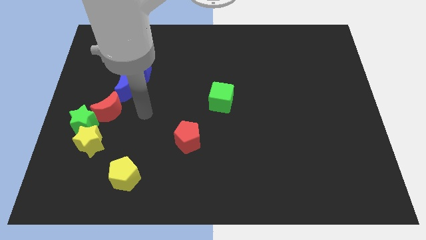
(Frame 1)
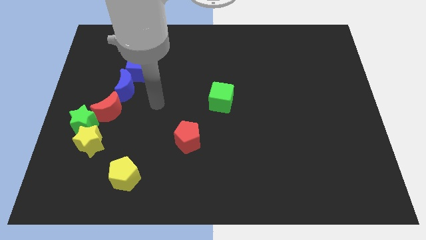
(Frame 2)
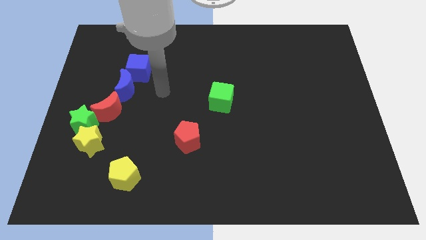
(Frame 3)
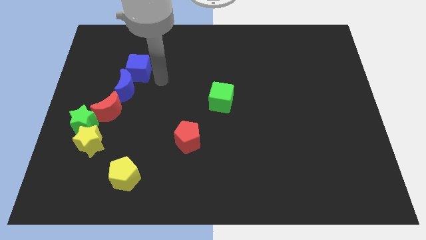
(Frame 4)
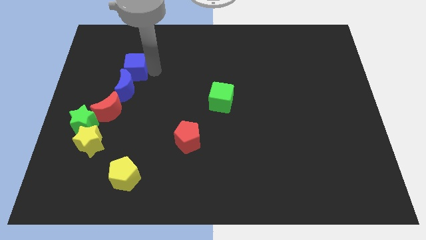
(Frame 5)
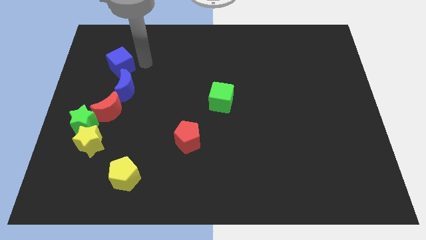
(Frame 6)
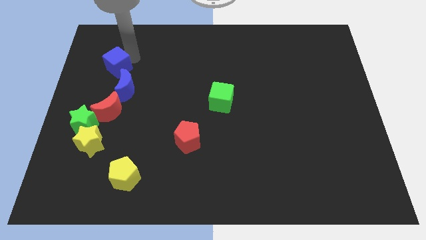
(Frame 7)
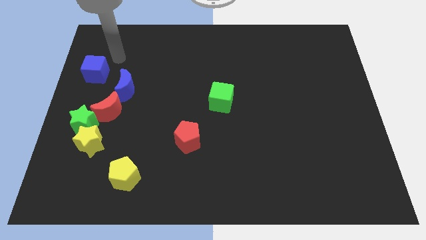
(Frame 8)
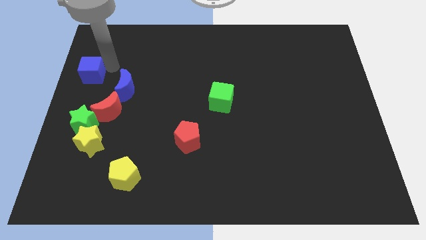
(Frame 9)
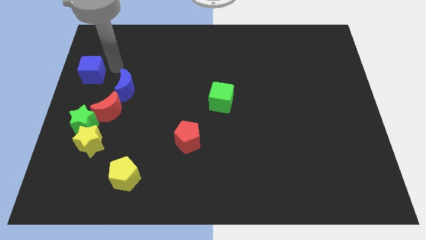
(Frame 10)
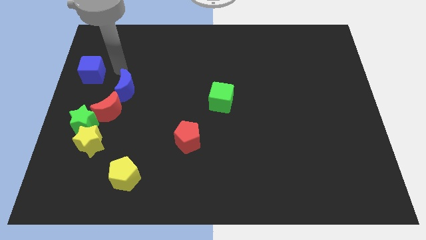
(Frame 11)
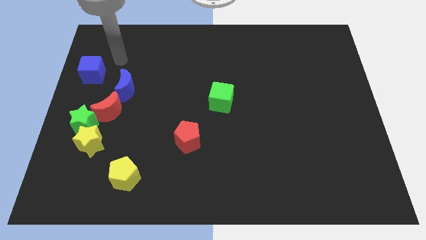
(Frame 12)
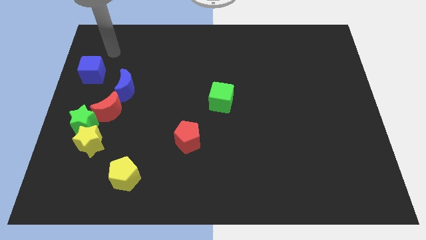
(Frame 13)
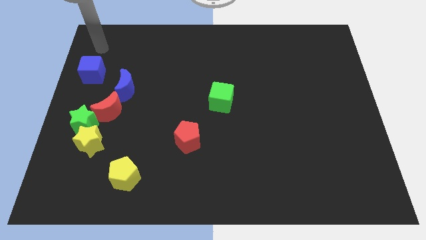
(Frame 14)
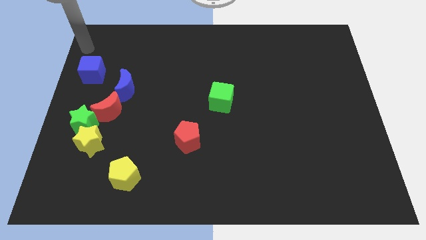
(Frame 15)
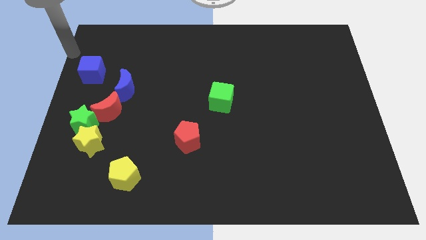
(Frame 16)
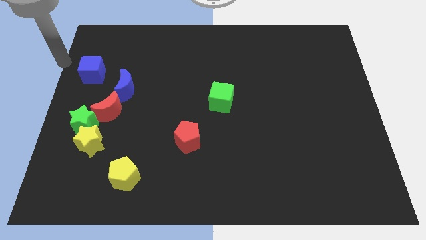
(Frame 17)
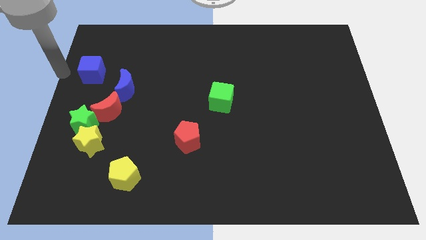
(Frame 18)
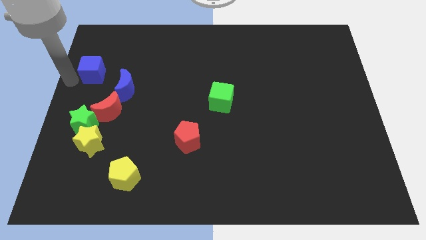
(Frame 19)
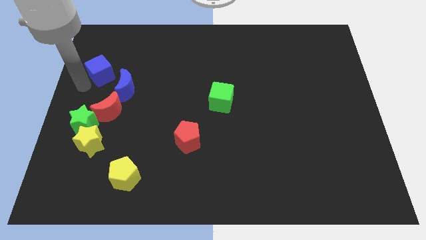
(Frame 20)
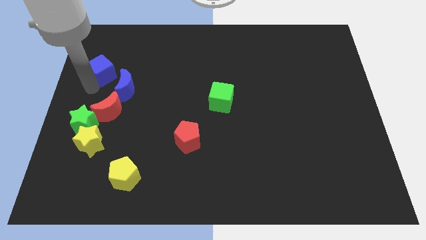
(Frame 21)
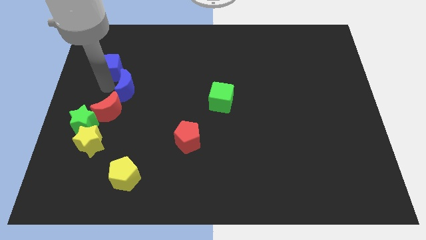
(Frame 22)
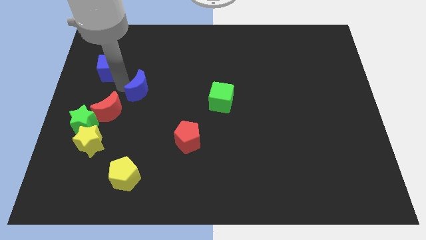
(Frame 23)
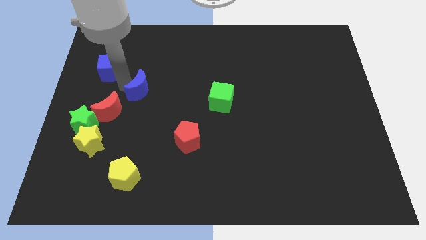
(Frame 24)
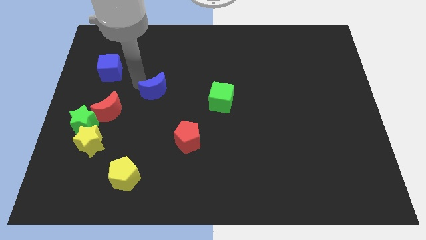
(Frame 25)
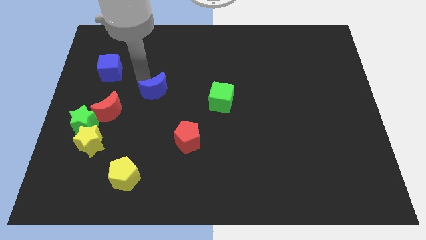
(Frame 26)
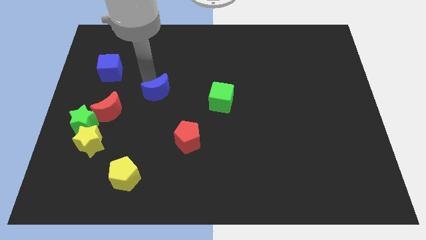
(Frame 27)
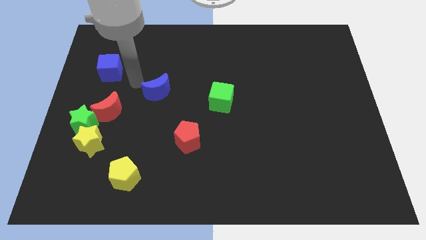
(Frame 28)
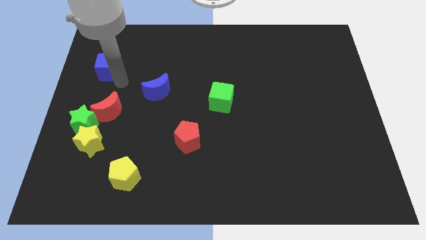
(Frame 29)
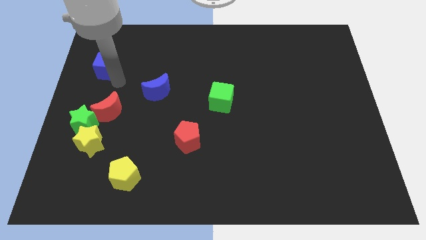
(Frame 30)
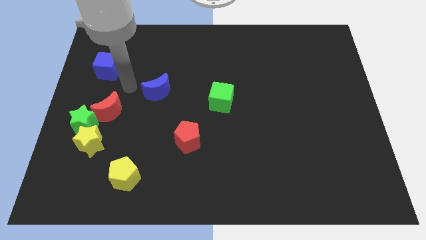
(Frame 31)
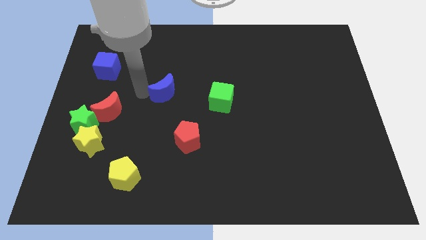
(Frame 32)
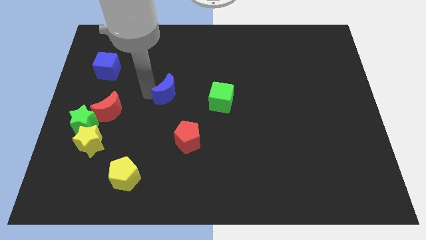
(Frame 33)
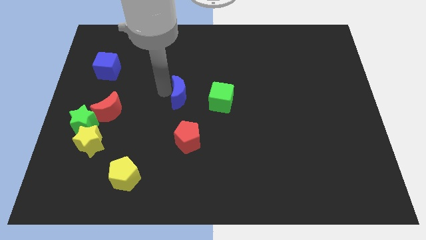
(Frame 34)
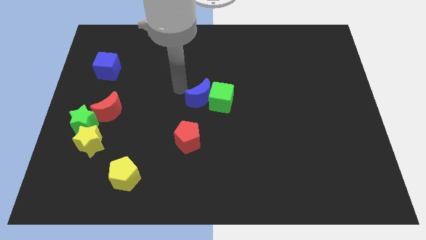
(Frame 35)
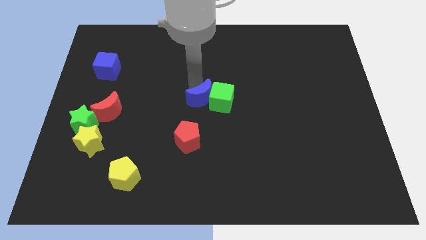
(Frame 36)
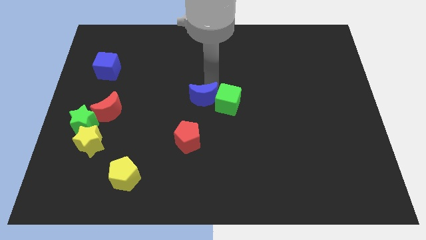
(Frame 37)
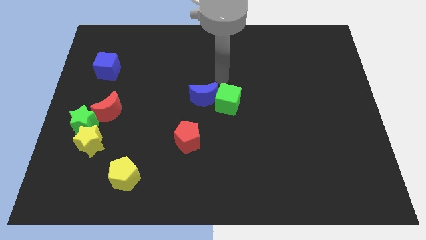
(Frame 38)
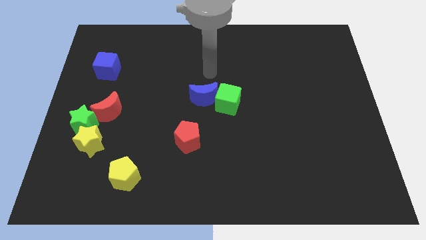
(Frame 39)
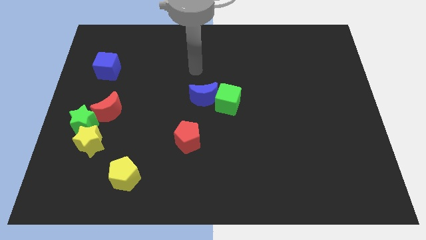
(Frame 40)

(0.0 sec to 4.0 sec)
push the blue crescent into the left of the green cube

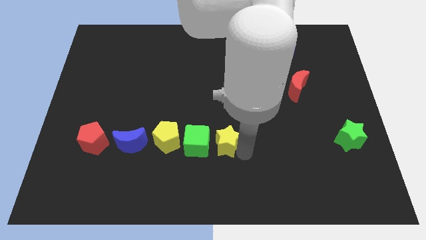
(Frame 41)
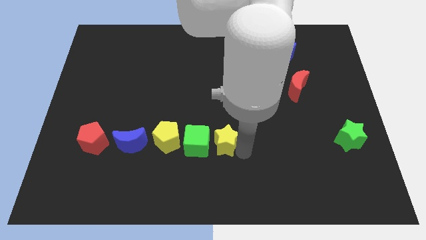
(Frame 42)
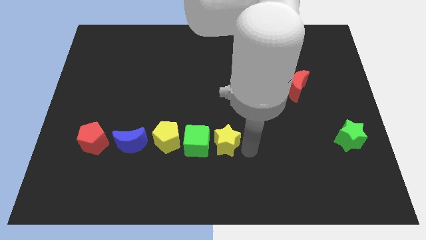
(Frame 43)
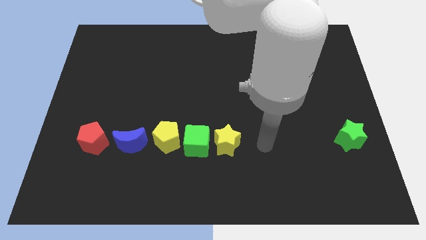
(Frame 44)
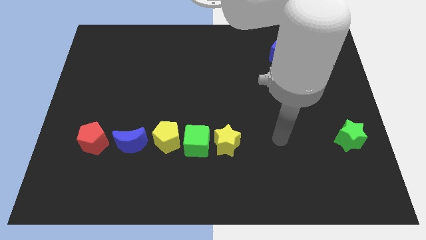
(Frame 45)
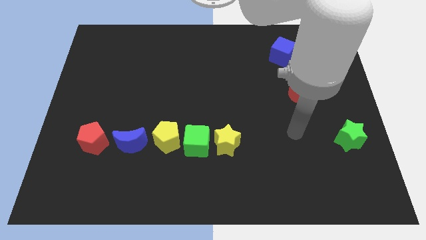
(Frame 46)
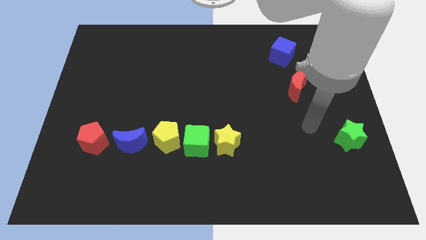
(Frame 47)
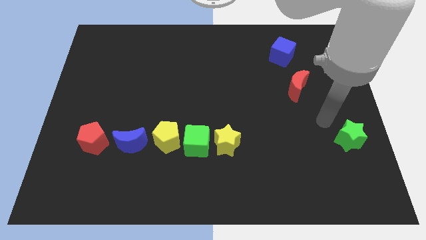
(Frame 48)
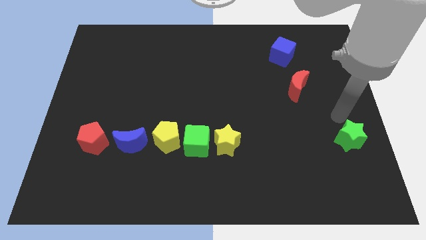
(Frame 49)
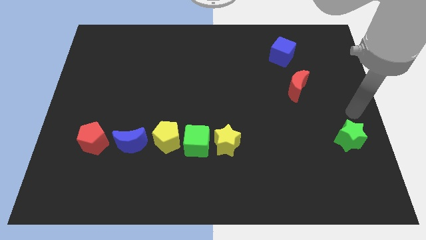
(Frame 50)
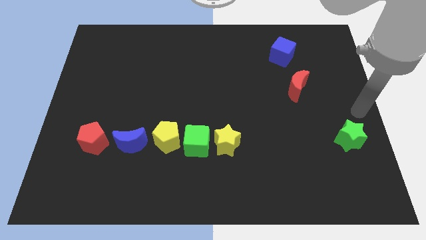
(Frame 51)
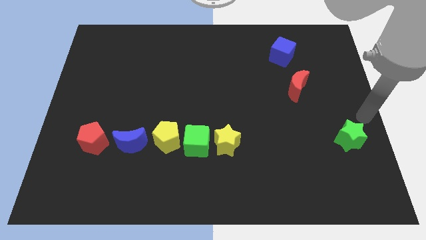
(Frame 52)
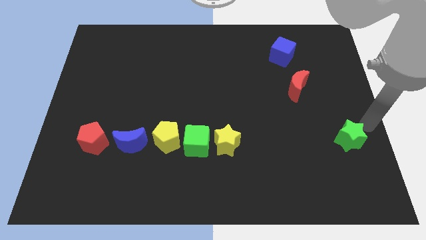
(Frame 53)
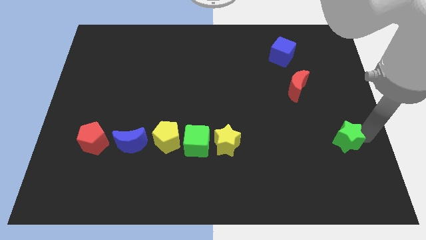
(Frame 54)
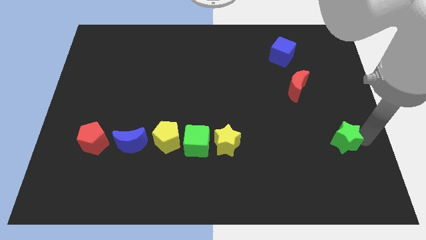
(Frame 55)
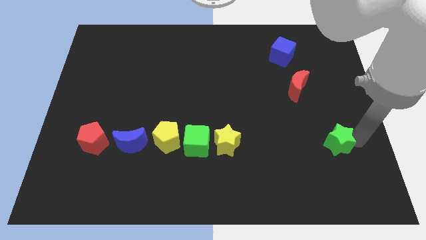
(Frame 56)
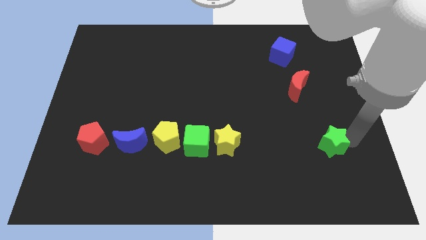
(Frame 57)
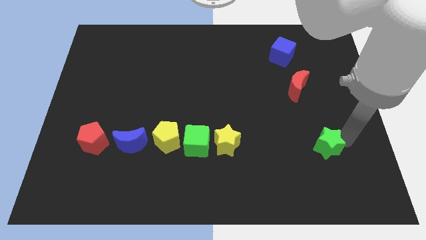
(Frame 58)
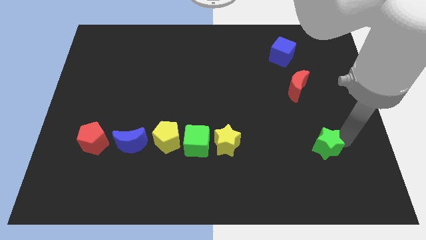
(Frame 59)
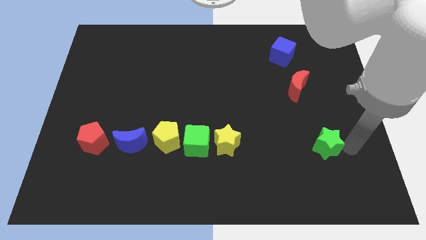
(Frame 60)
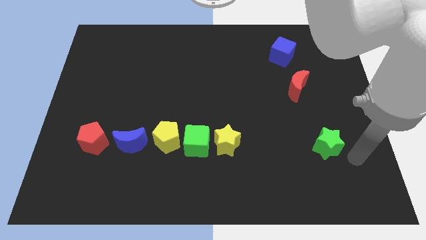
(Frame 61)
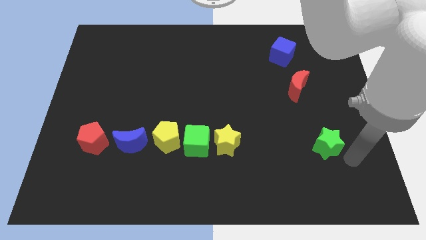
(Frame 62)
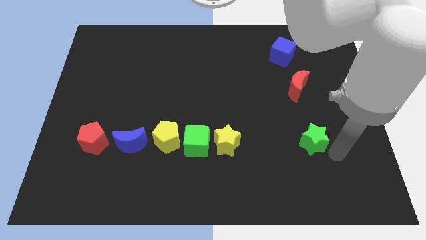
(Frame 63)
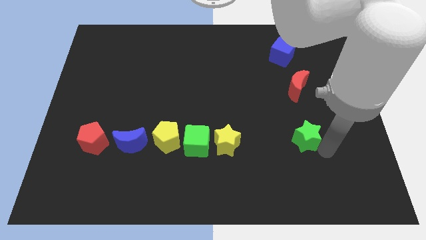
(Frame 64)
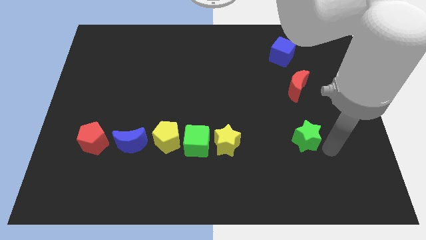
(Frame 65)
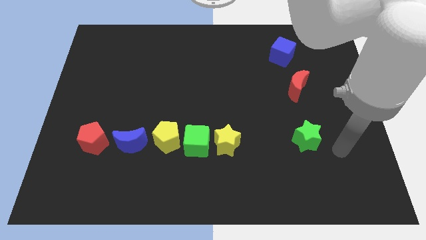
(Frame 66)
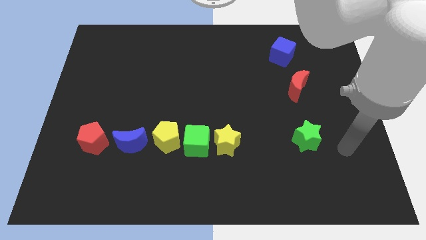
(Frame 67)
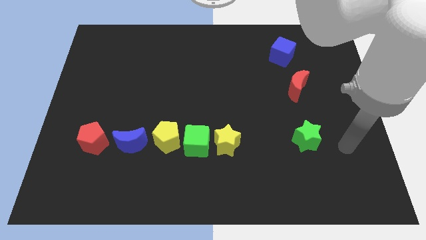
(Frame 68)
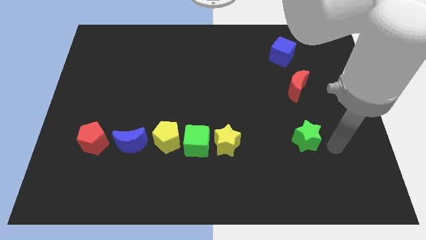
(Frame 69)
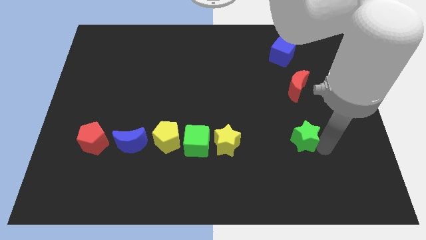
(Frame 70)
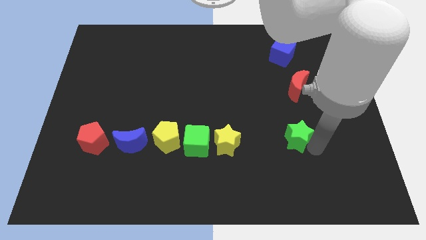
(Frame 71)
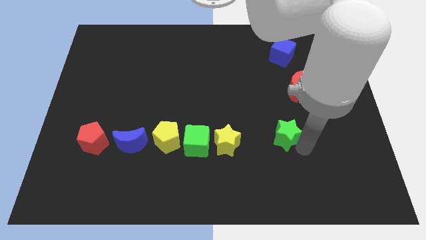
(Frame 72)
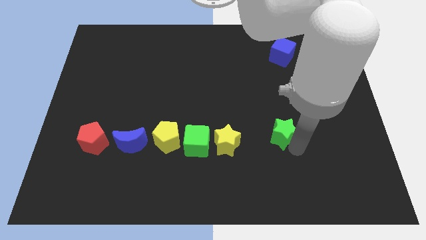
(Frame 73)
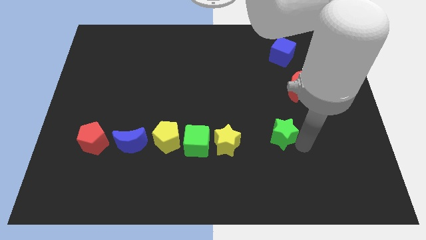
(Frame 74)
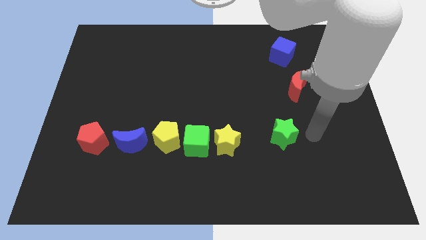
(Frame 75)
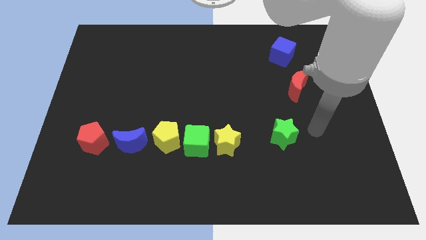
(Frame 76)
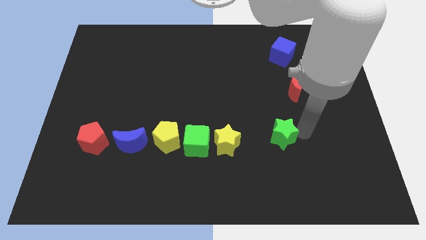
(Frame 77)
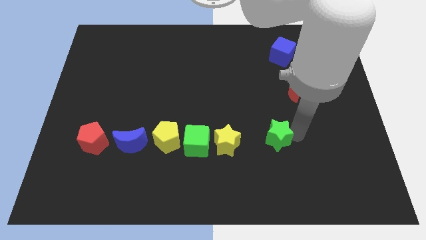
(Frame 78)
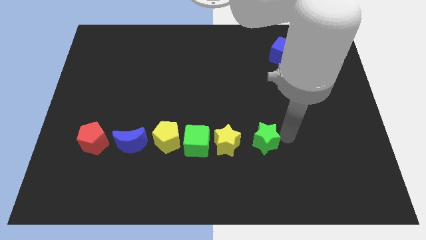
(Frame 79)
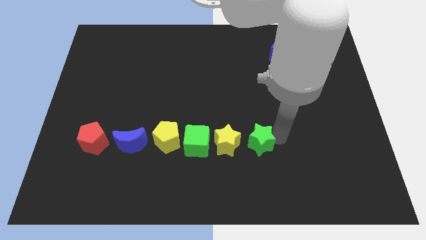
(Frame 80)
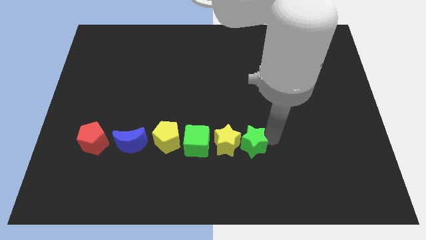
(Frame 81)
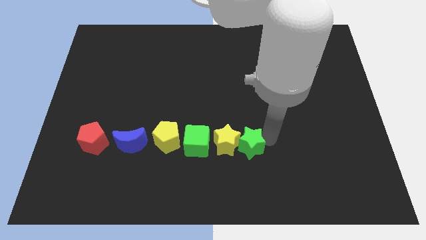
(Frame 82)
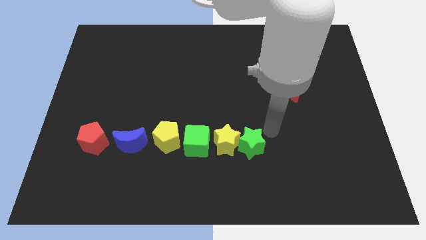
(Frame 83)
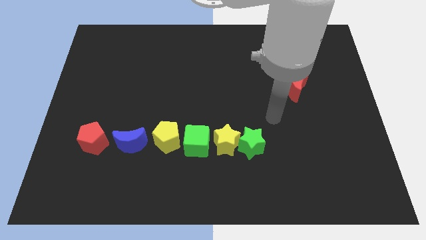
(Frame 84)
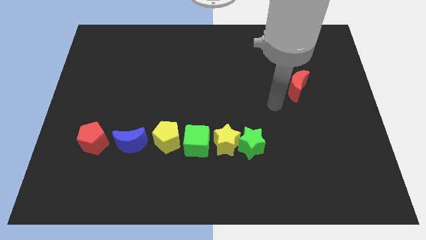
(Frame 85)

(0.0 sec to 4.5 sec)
drag the green star to the right of the yellow star

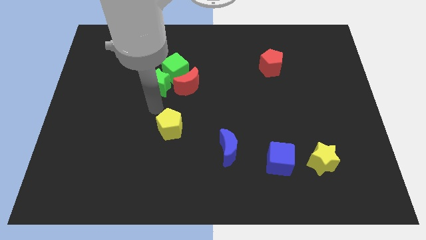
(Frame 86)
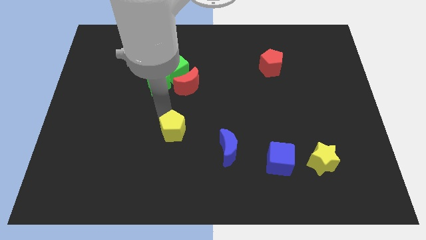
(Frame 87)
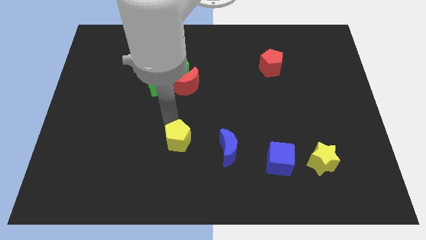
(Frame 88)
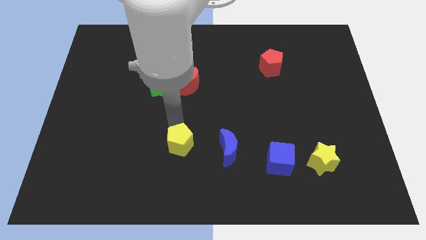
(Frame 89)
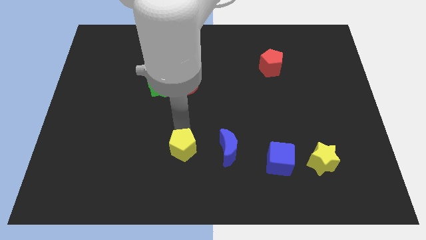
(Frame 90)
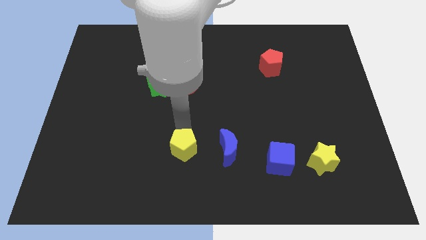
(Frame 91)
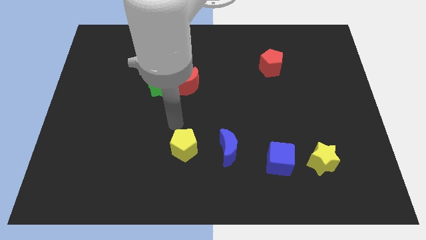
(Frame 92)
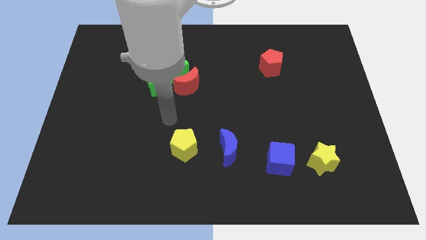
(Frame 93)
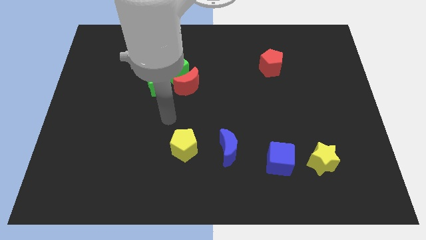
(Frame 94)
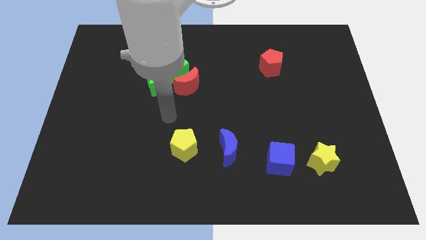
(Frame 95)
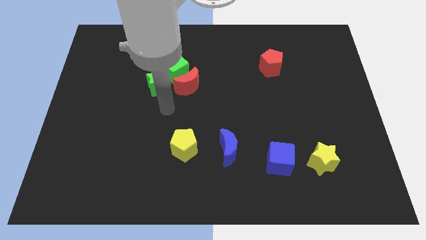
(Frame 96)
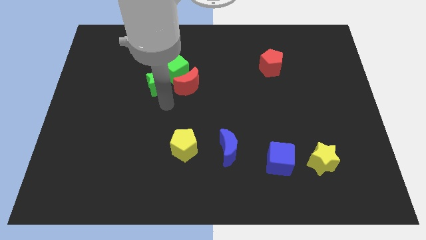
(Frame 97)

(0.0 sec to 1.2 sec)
place yellow pentagon to the left of blue crescent
